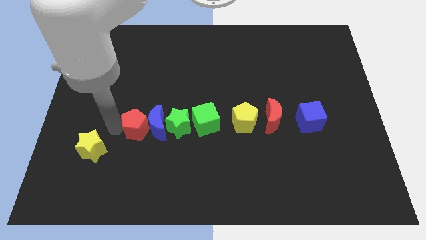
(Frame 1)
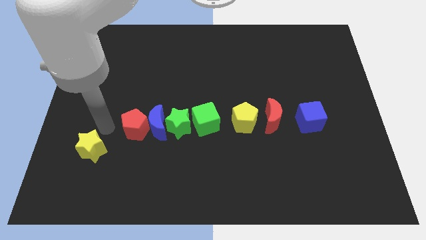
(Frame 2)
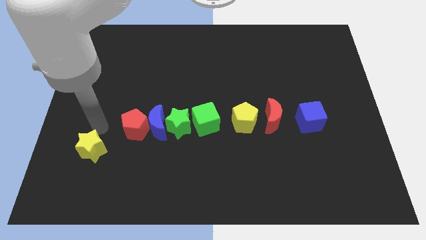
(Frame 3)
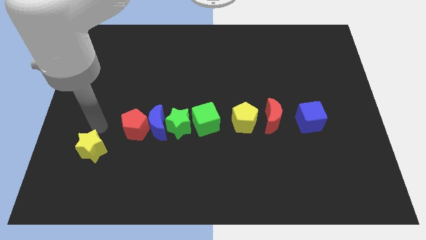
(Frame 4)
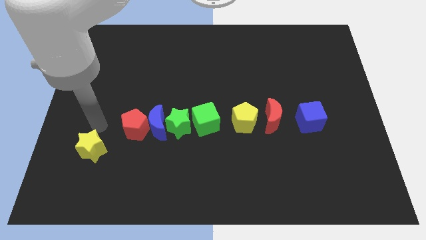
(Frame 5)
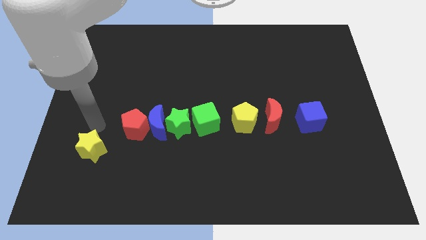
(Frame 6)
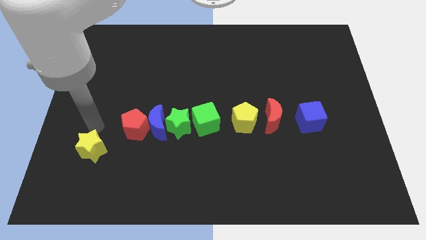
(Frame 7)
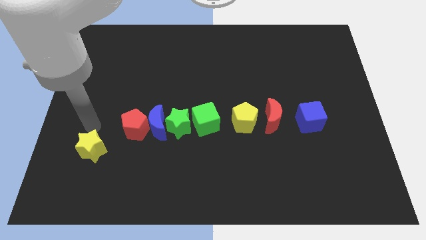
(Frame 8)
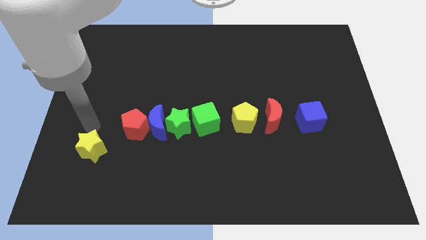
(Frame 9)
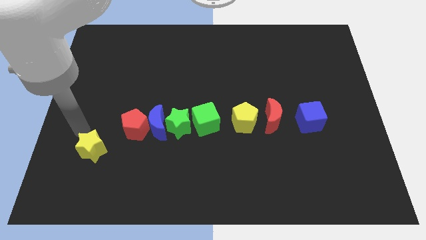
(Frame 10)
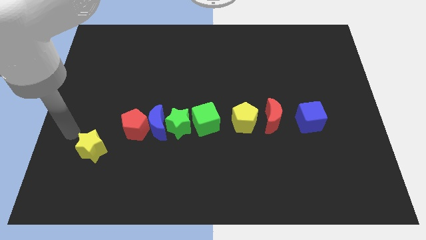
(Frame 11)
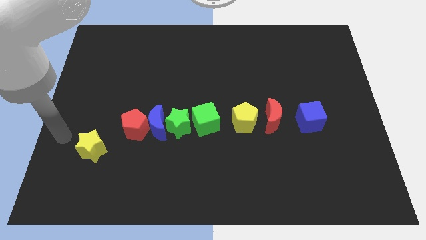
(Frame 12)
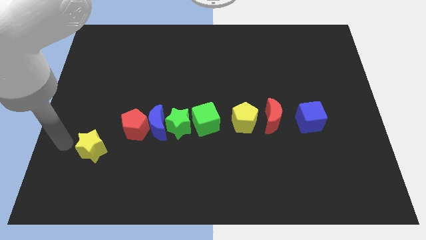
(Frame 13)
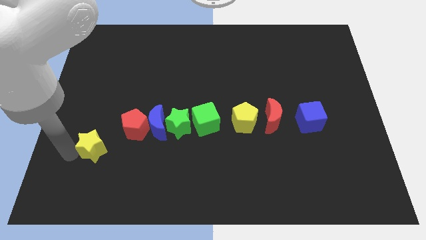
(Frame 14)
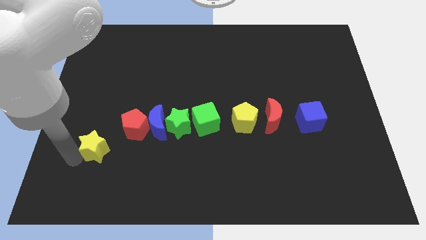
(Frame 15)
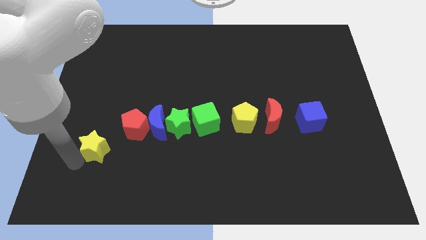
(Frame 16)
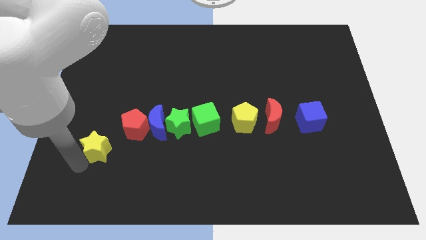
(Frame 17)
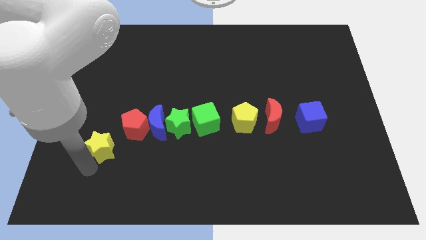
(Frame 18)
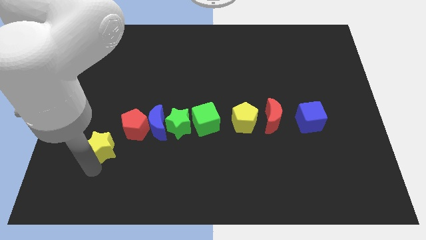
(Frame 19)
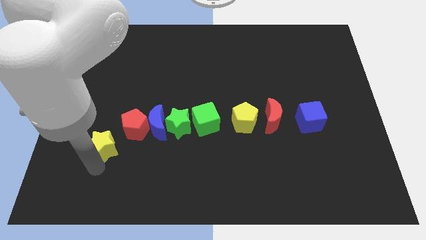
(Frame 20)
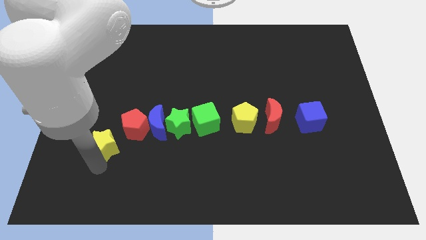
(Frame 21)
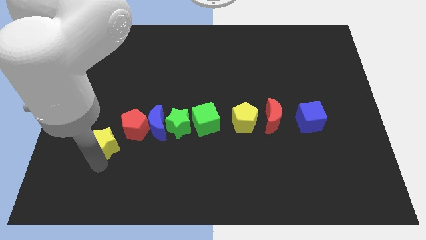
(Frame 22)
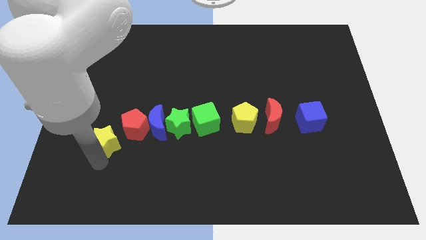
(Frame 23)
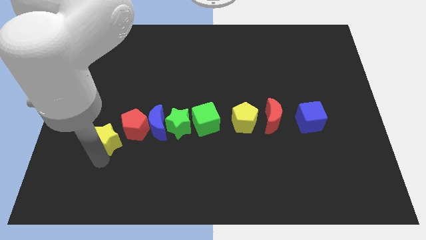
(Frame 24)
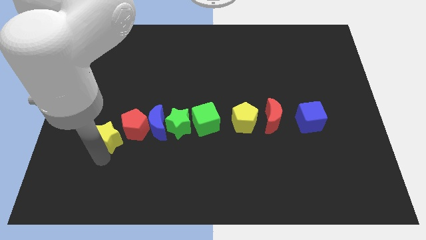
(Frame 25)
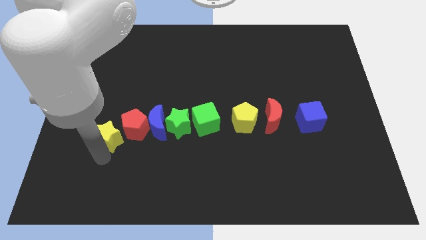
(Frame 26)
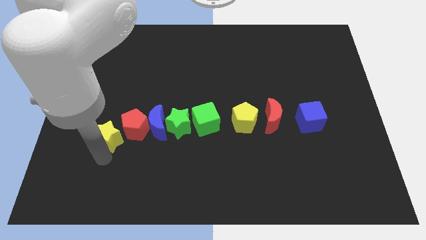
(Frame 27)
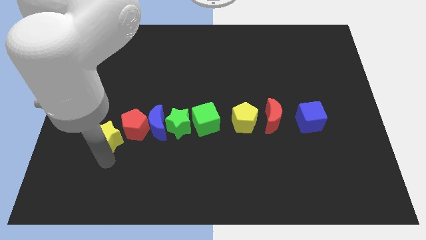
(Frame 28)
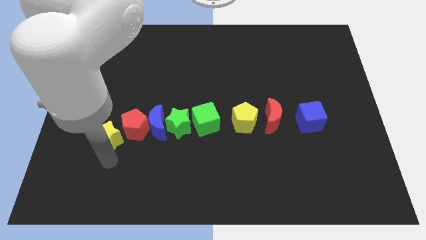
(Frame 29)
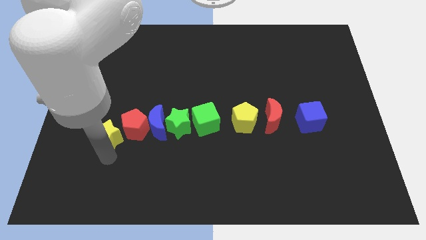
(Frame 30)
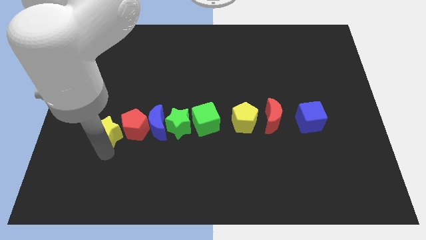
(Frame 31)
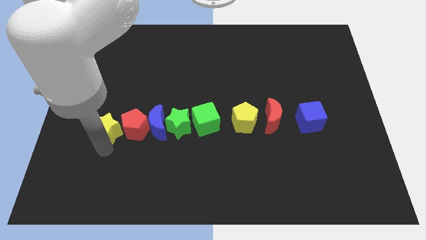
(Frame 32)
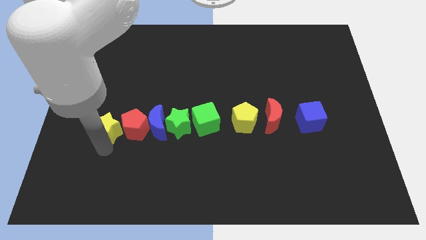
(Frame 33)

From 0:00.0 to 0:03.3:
push the yellow star to the left of the red pentagon

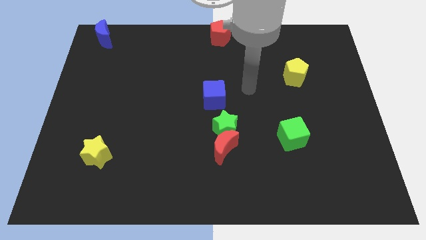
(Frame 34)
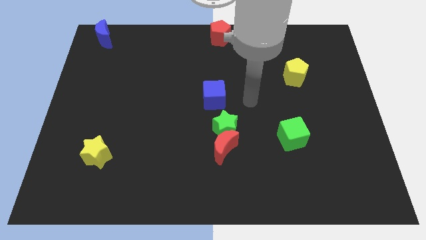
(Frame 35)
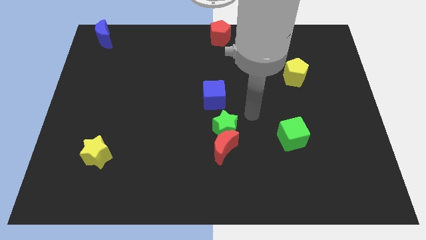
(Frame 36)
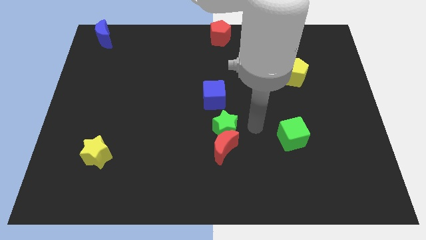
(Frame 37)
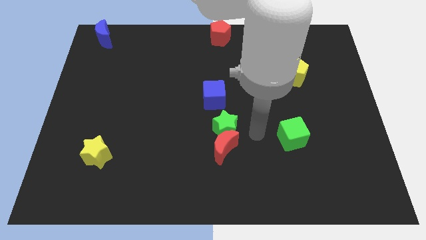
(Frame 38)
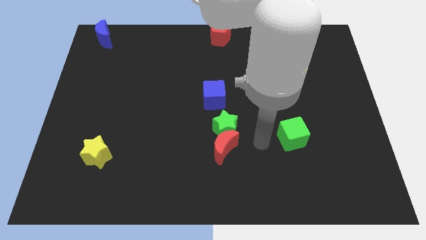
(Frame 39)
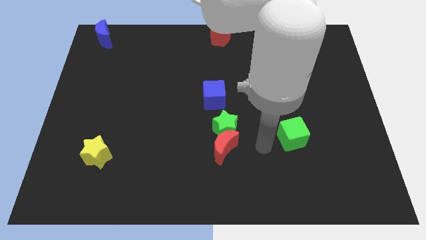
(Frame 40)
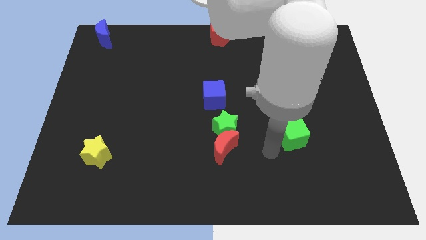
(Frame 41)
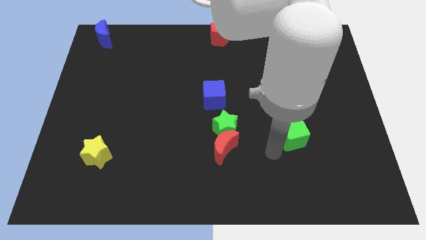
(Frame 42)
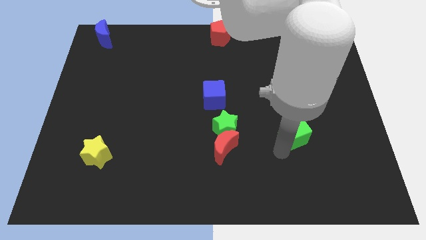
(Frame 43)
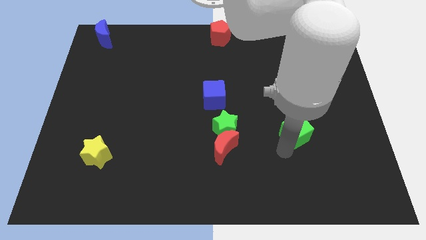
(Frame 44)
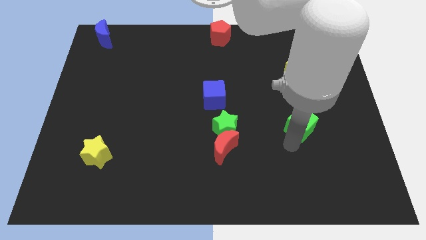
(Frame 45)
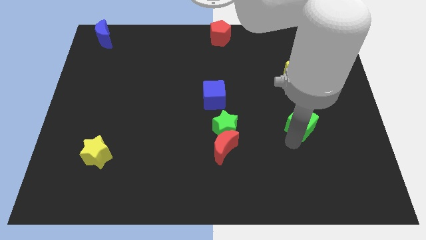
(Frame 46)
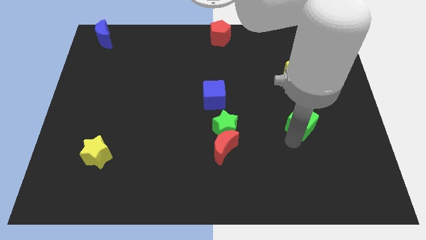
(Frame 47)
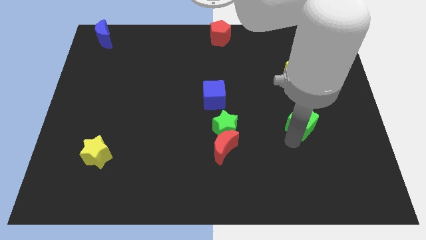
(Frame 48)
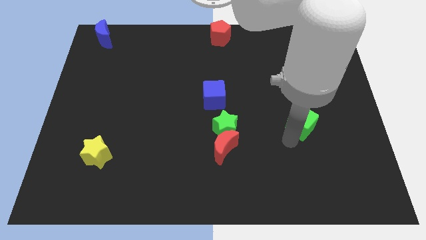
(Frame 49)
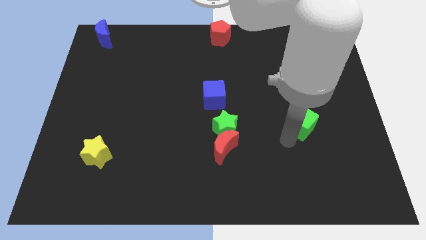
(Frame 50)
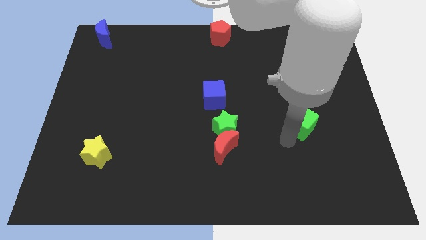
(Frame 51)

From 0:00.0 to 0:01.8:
move the green cube to the right of the green star

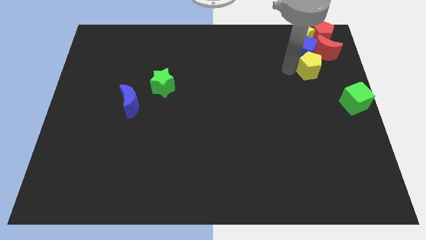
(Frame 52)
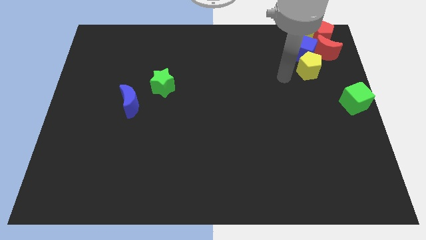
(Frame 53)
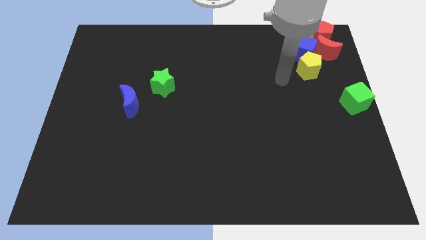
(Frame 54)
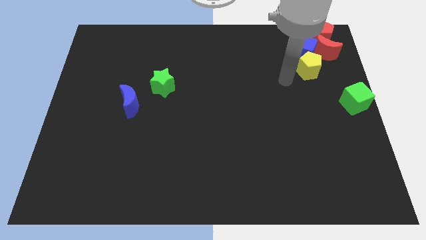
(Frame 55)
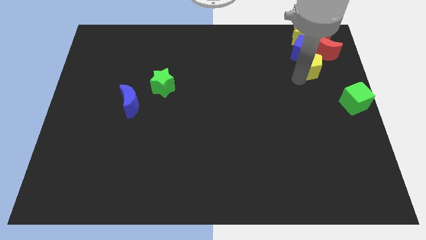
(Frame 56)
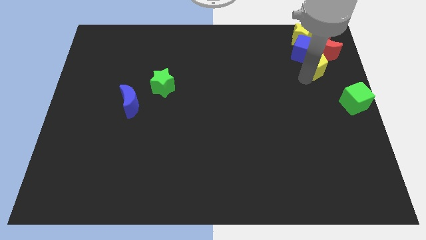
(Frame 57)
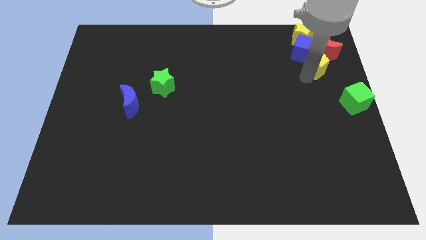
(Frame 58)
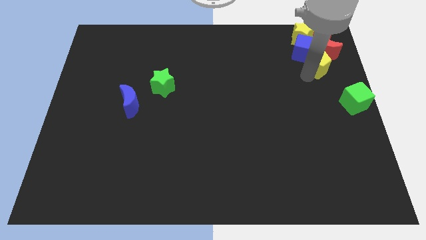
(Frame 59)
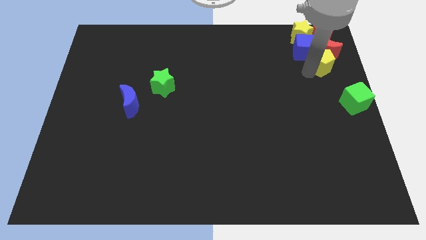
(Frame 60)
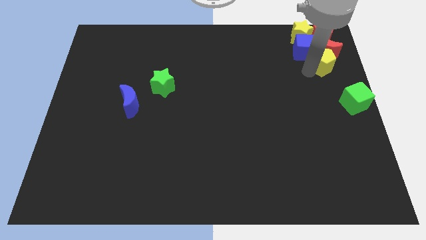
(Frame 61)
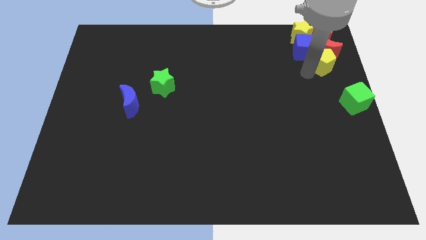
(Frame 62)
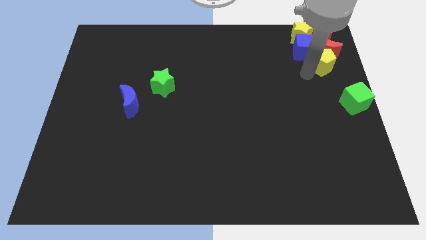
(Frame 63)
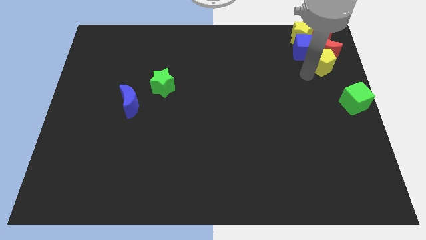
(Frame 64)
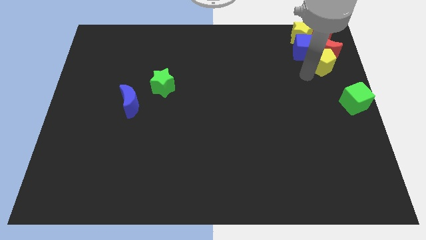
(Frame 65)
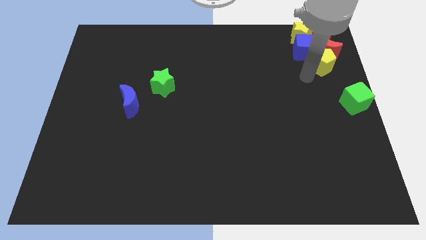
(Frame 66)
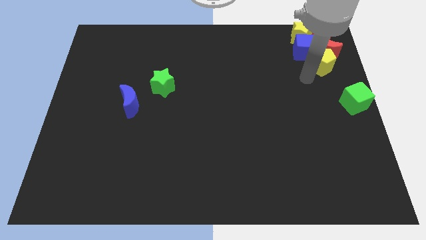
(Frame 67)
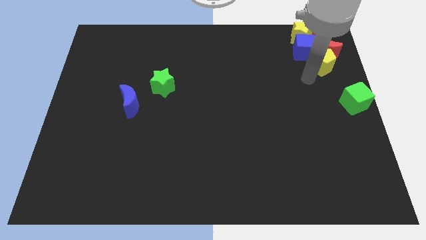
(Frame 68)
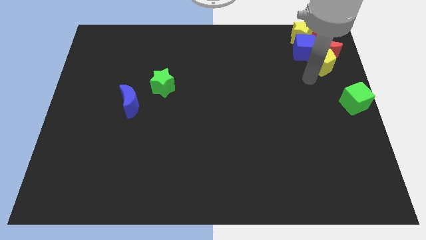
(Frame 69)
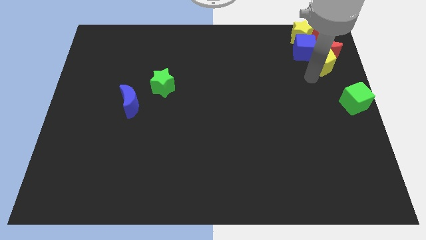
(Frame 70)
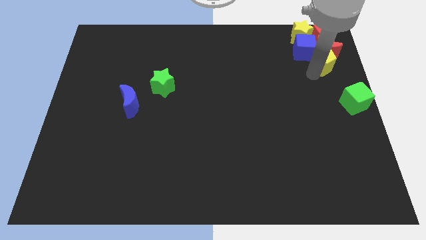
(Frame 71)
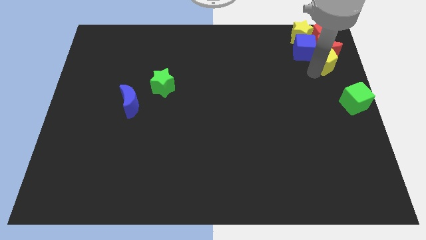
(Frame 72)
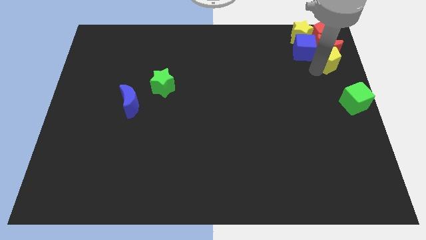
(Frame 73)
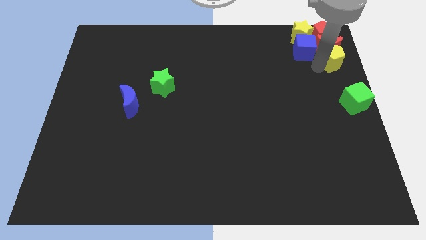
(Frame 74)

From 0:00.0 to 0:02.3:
move the yellow pentagon into the red moon

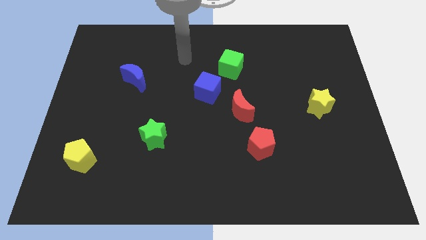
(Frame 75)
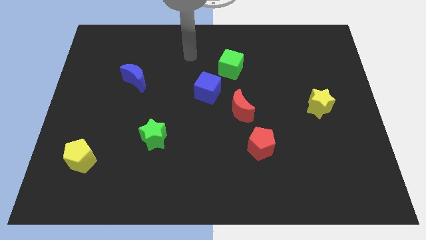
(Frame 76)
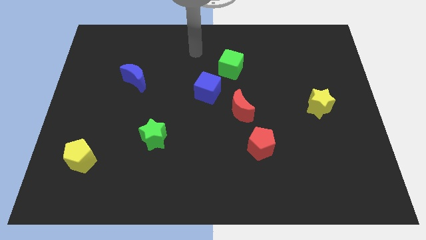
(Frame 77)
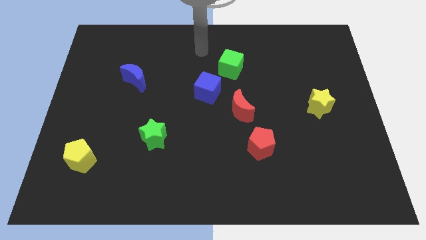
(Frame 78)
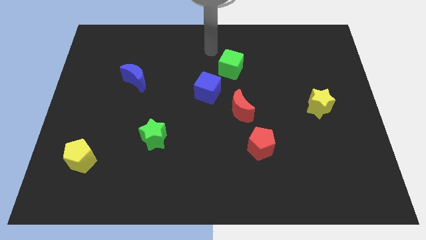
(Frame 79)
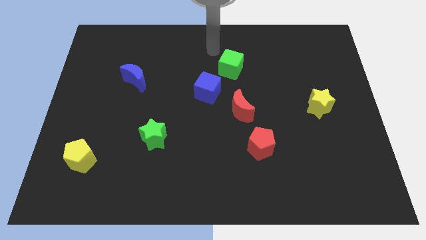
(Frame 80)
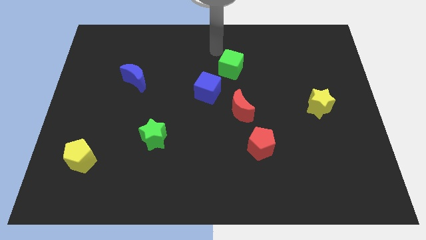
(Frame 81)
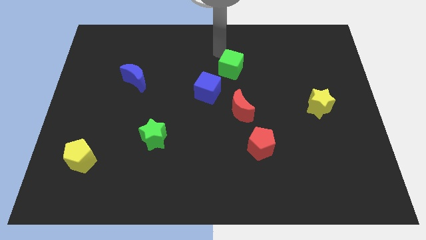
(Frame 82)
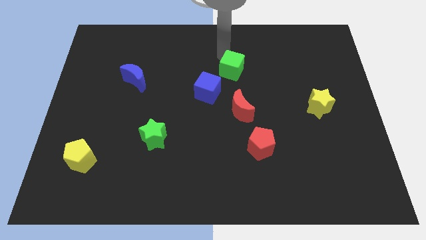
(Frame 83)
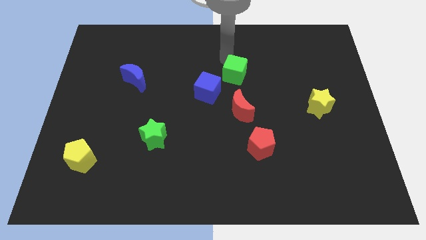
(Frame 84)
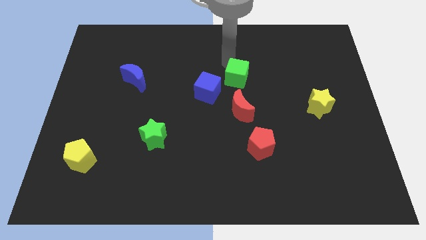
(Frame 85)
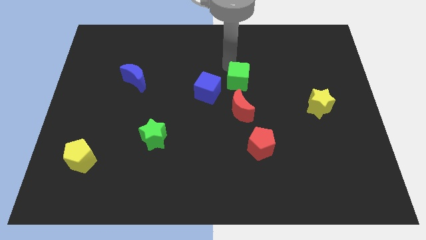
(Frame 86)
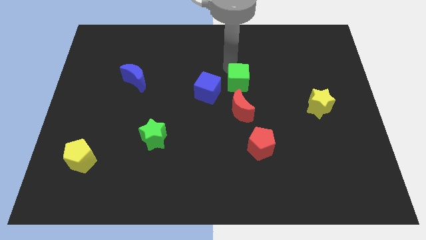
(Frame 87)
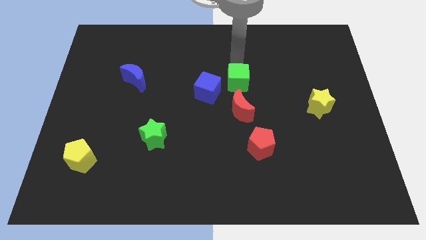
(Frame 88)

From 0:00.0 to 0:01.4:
push the green cube to the top of the red crescent
